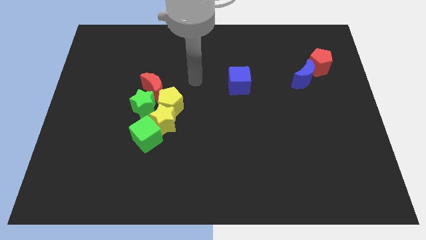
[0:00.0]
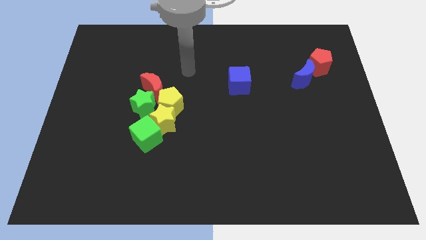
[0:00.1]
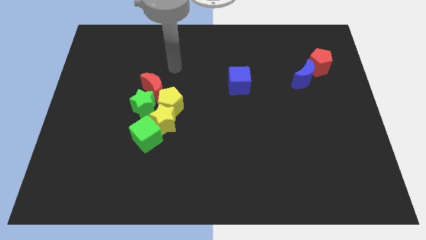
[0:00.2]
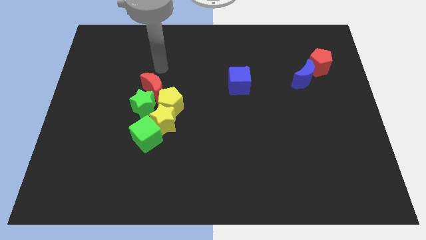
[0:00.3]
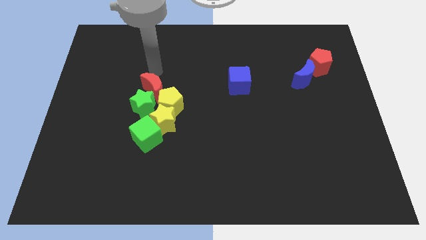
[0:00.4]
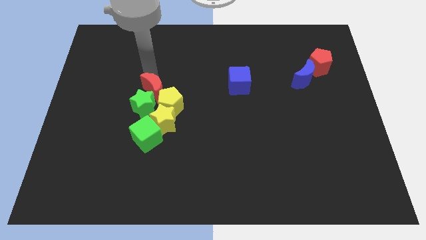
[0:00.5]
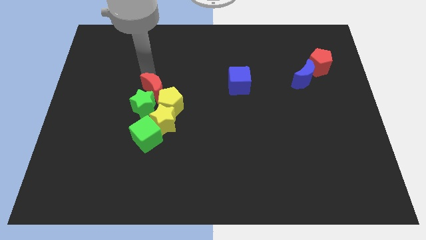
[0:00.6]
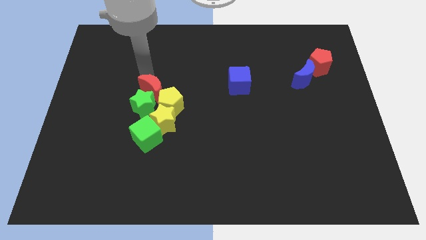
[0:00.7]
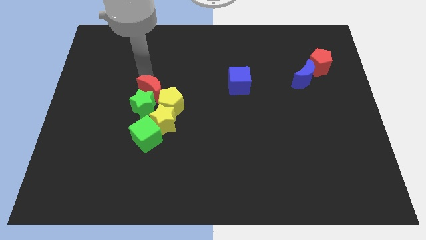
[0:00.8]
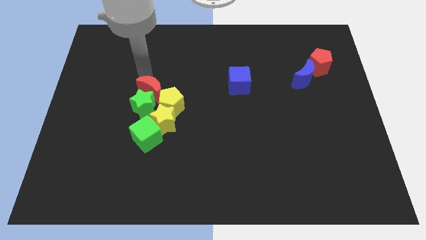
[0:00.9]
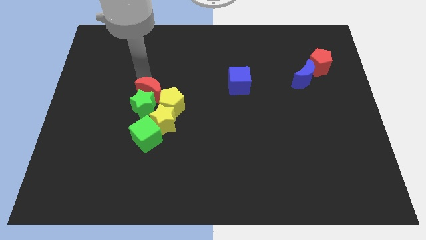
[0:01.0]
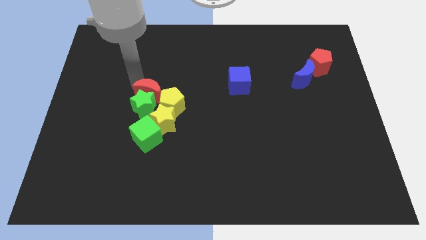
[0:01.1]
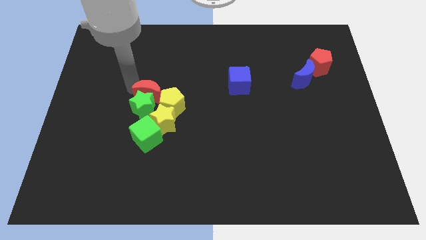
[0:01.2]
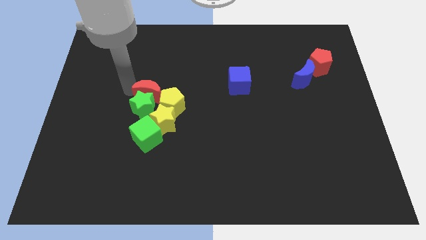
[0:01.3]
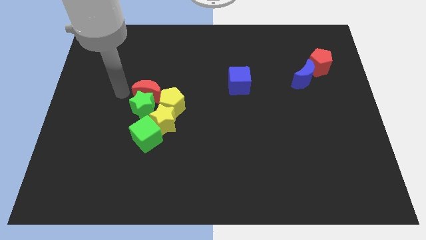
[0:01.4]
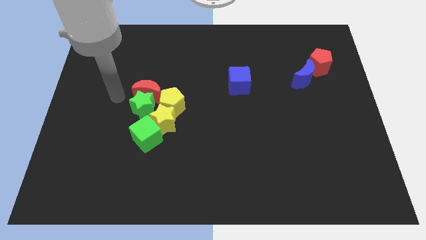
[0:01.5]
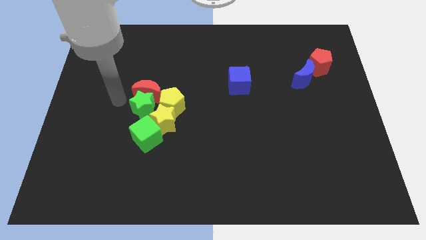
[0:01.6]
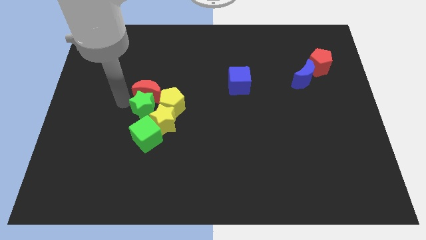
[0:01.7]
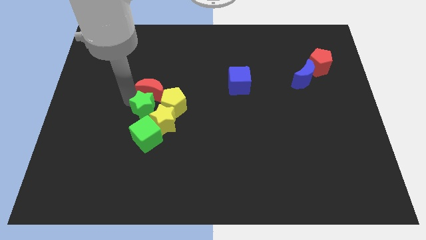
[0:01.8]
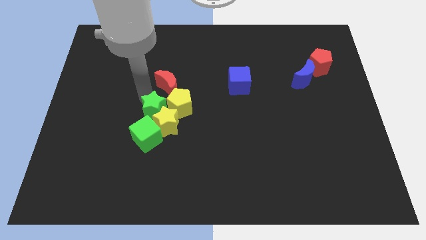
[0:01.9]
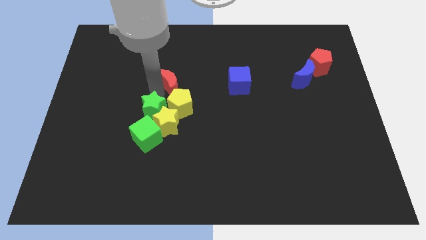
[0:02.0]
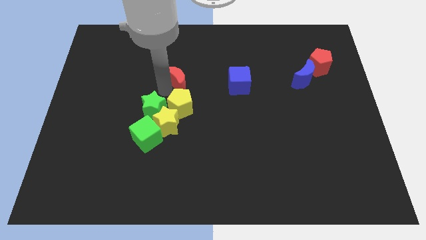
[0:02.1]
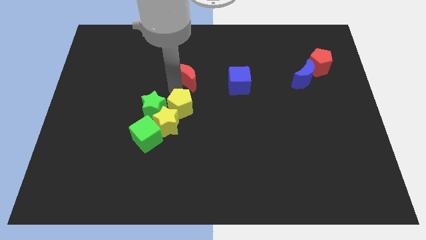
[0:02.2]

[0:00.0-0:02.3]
place red crescent to the left side of the blue cube

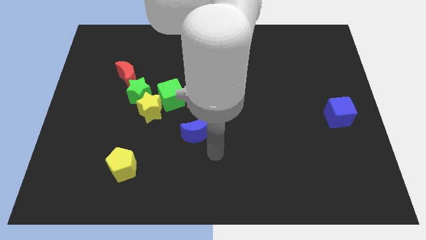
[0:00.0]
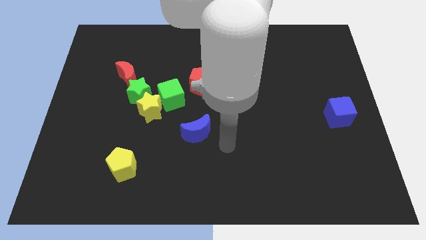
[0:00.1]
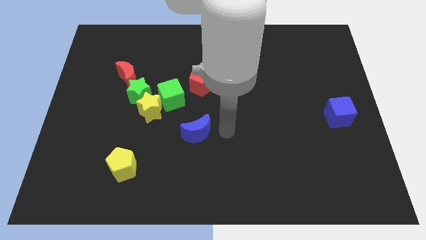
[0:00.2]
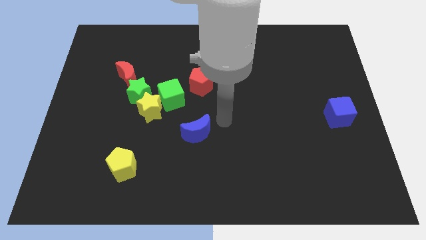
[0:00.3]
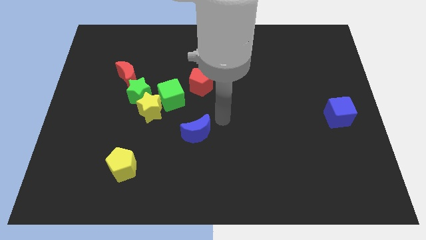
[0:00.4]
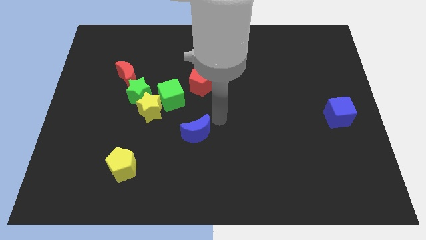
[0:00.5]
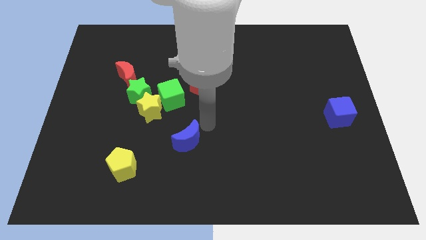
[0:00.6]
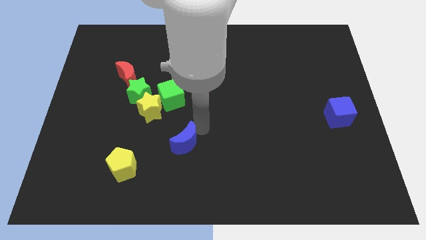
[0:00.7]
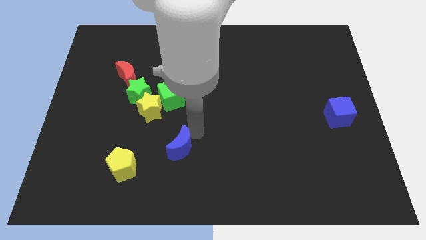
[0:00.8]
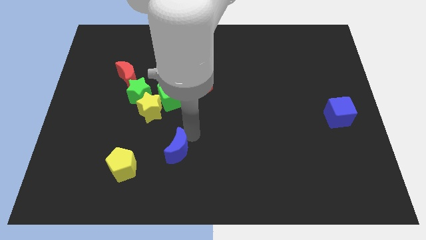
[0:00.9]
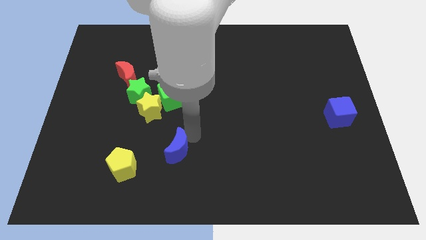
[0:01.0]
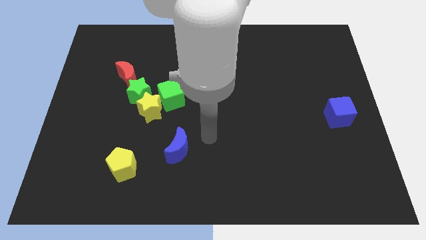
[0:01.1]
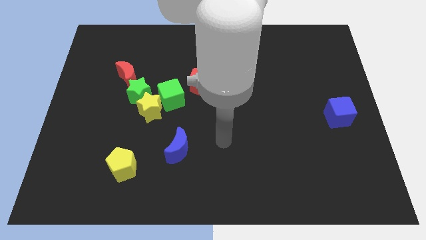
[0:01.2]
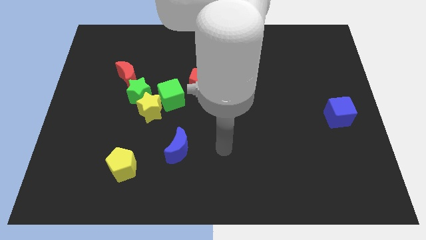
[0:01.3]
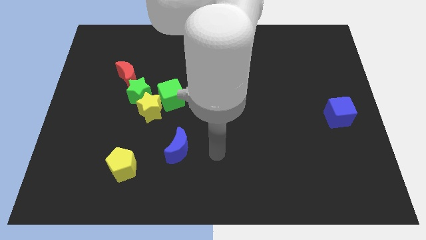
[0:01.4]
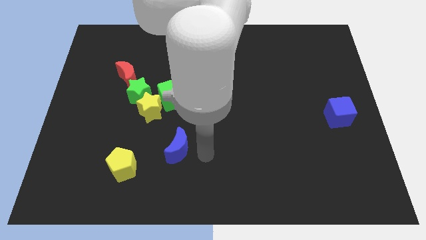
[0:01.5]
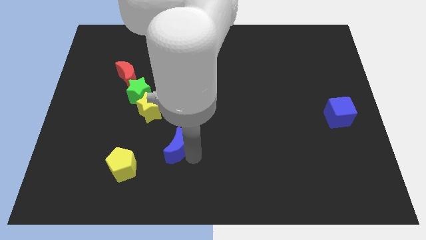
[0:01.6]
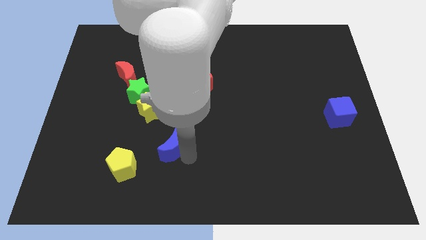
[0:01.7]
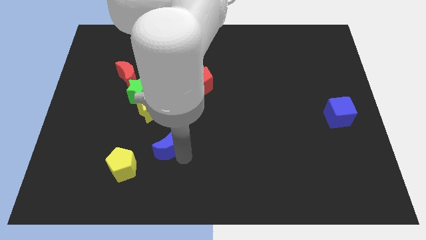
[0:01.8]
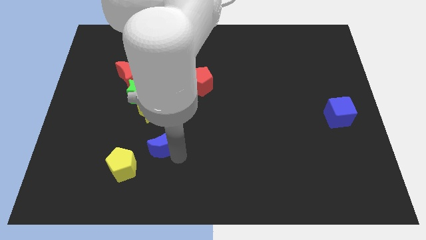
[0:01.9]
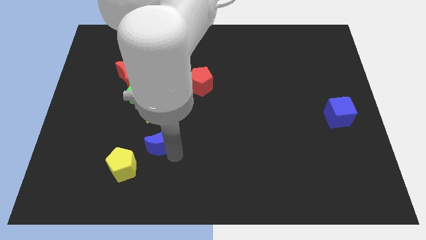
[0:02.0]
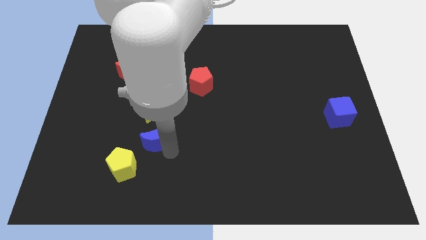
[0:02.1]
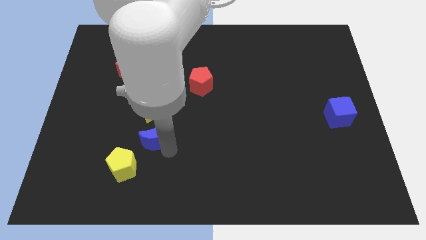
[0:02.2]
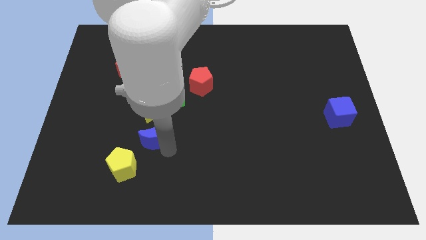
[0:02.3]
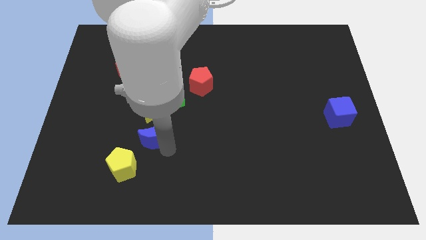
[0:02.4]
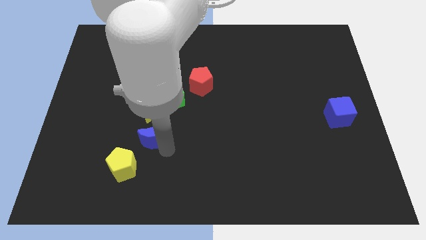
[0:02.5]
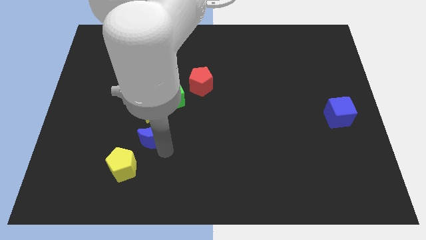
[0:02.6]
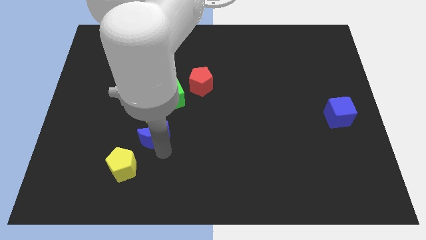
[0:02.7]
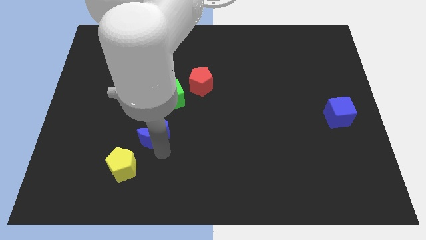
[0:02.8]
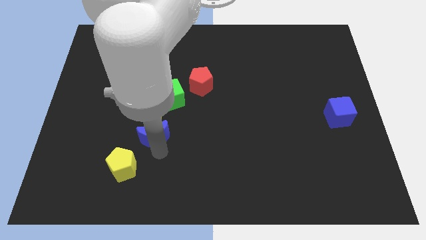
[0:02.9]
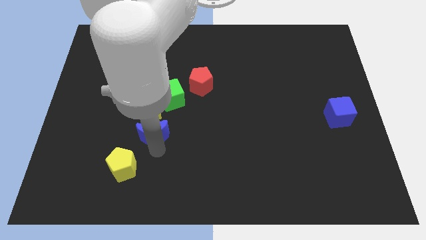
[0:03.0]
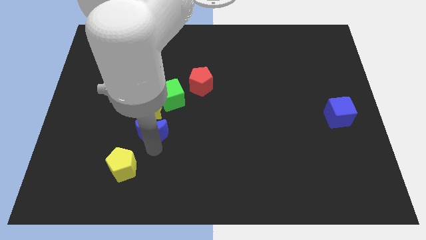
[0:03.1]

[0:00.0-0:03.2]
place the blue moon at the bottom of yellow star

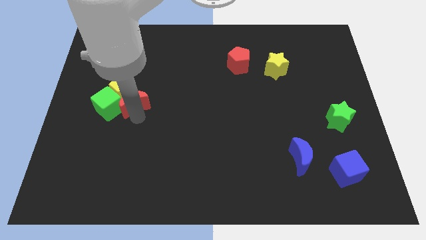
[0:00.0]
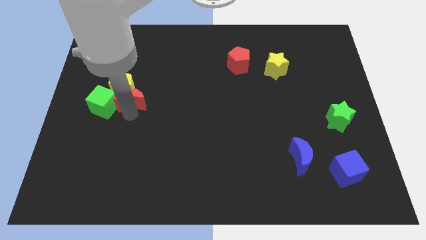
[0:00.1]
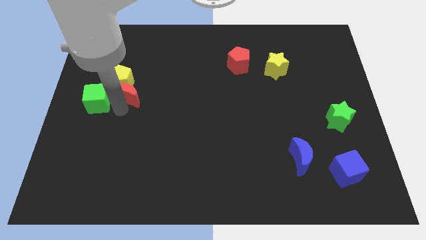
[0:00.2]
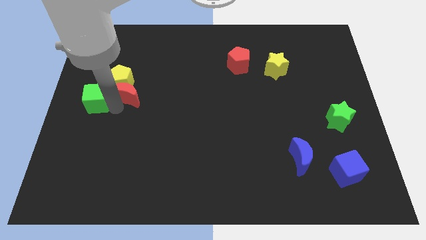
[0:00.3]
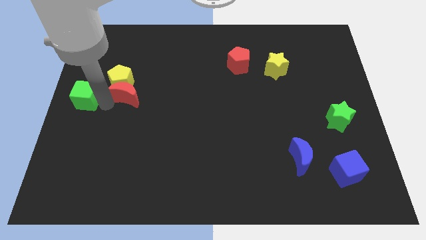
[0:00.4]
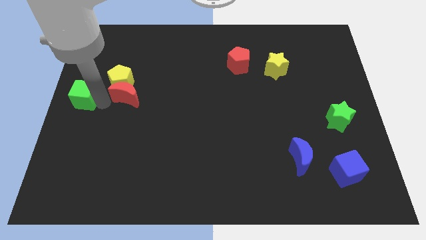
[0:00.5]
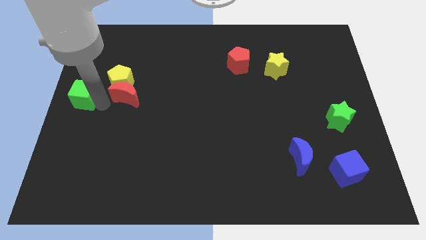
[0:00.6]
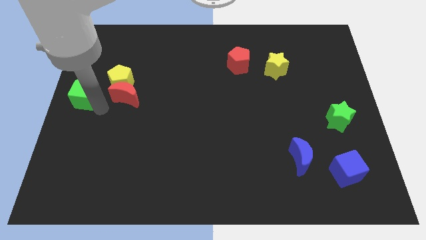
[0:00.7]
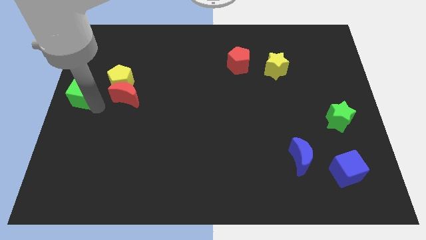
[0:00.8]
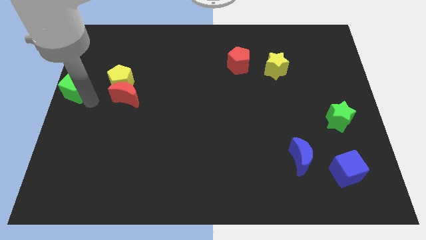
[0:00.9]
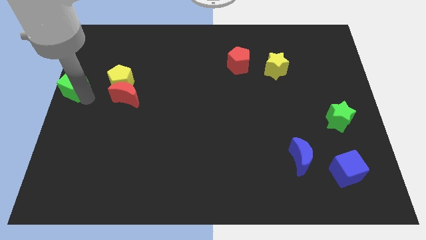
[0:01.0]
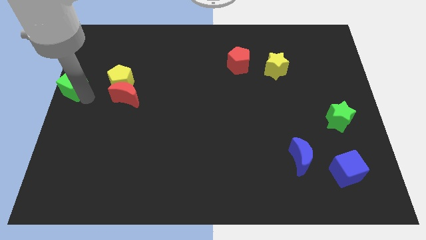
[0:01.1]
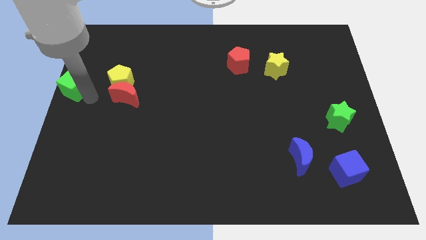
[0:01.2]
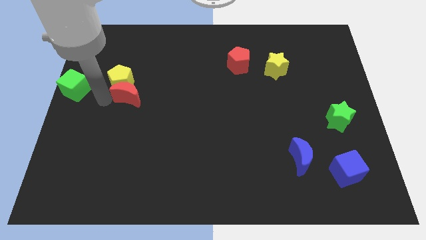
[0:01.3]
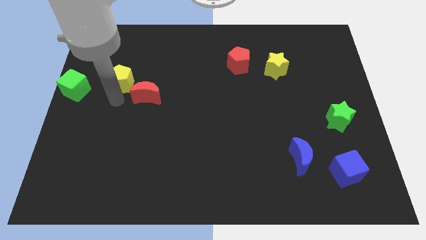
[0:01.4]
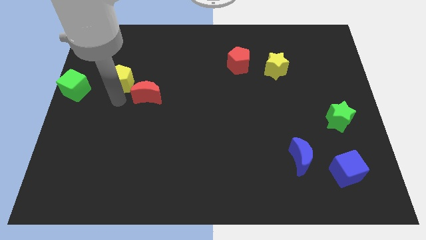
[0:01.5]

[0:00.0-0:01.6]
move the green cube towards center left

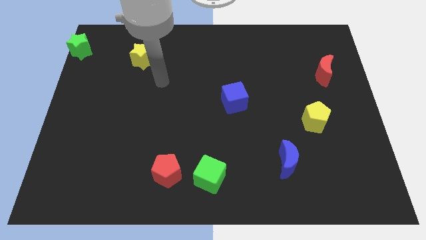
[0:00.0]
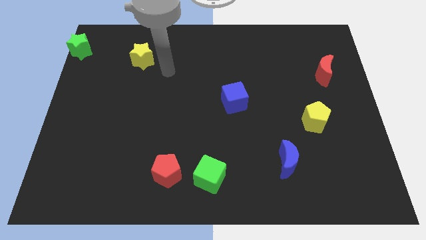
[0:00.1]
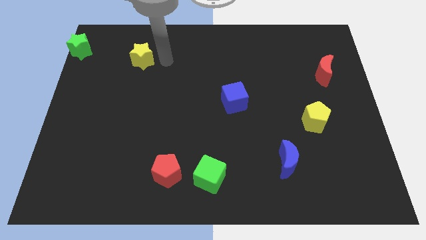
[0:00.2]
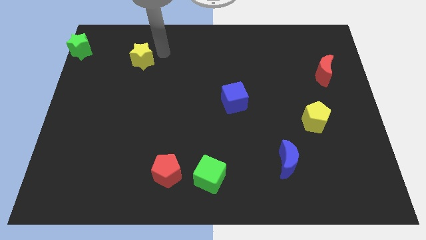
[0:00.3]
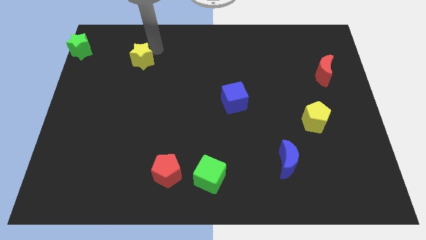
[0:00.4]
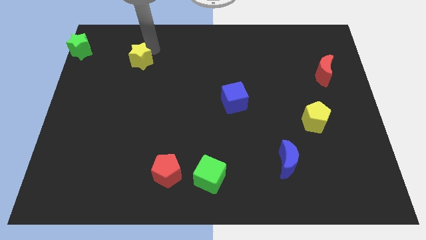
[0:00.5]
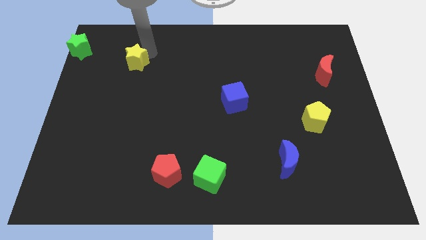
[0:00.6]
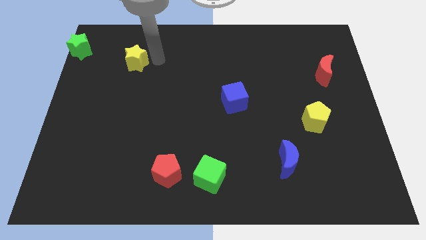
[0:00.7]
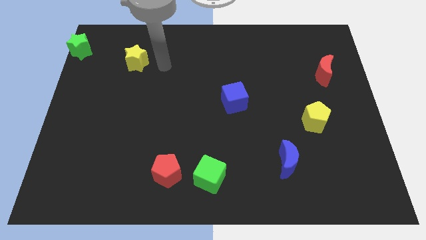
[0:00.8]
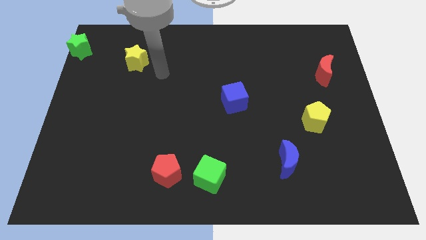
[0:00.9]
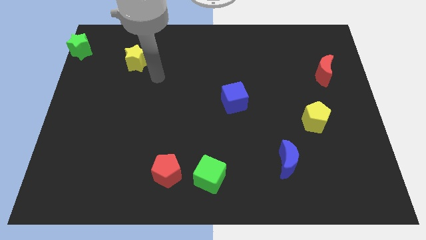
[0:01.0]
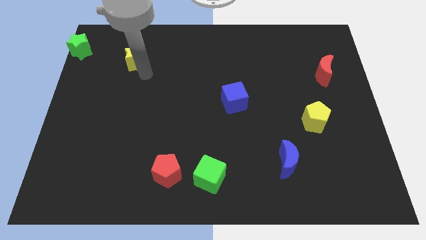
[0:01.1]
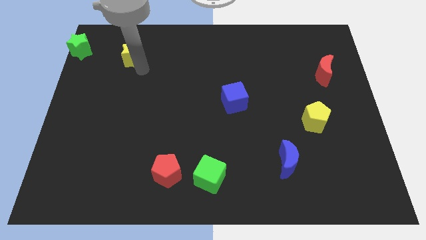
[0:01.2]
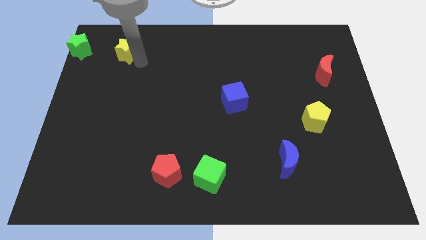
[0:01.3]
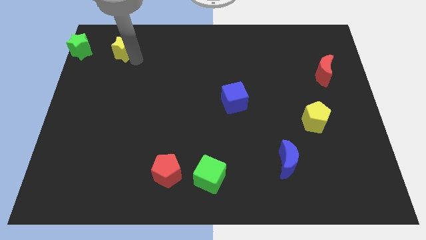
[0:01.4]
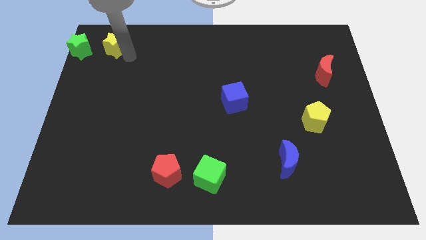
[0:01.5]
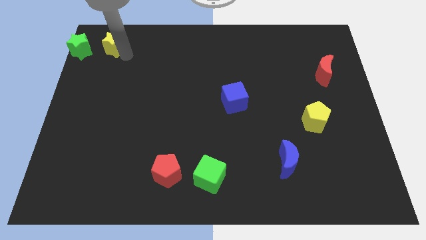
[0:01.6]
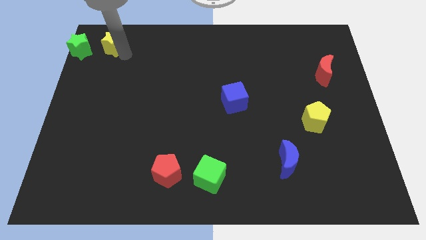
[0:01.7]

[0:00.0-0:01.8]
put the yellow star right to the green star
